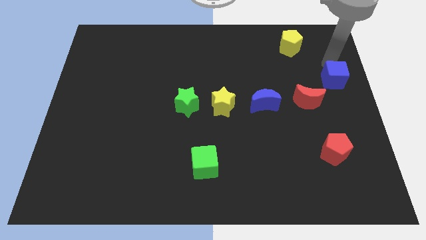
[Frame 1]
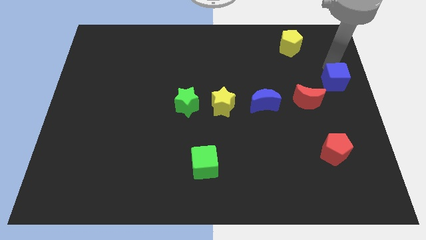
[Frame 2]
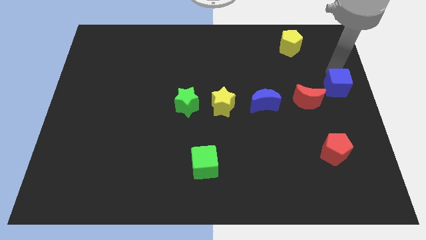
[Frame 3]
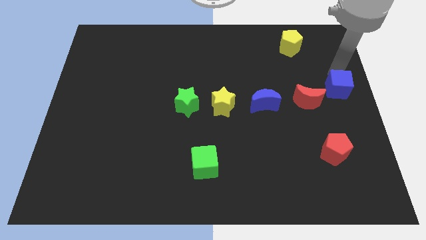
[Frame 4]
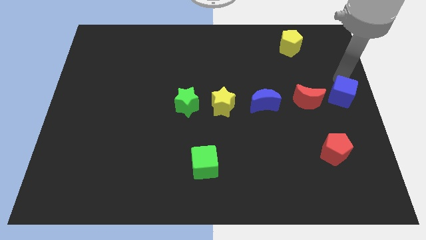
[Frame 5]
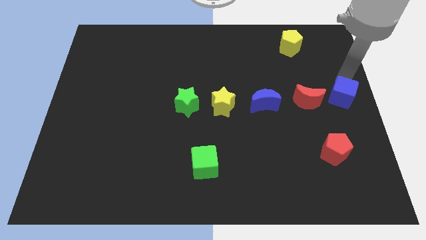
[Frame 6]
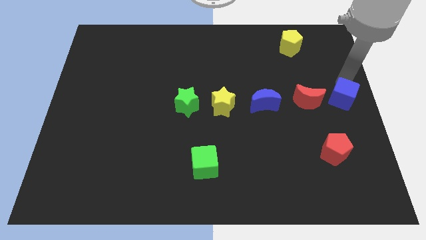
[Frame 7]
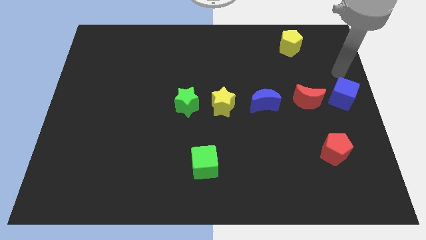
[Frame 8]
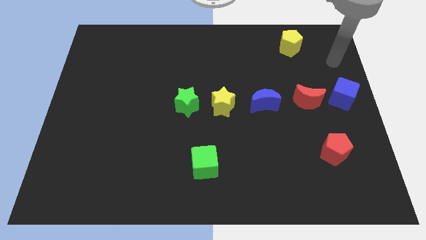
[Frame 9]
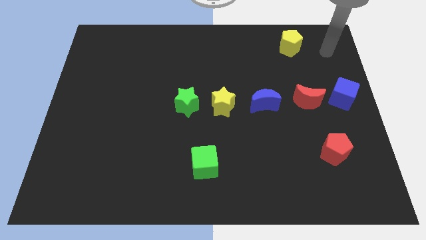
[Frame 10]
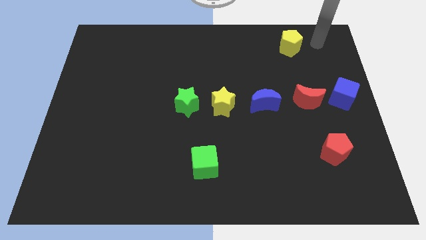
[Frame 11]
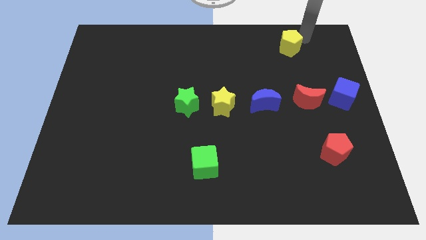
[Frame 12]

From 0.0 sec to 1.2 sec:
move the blue cube slightly downwards

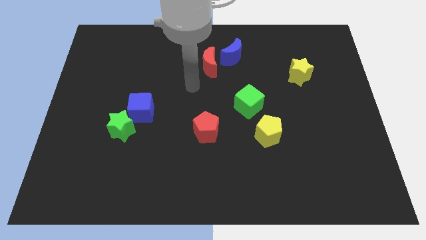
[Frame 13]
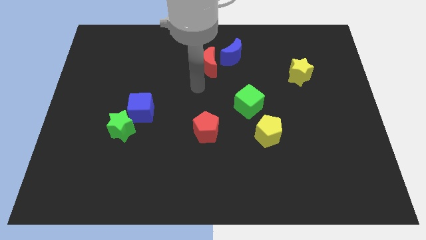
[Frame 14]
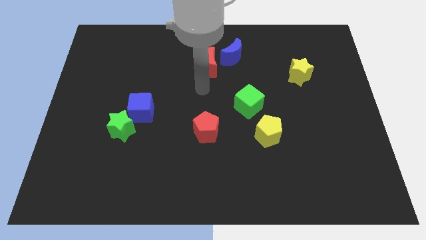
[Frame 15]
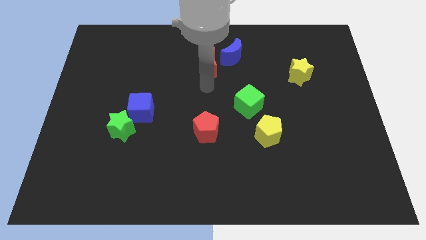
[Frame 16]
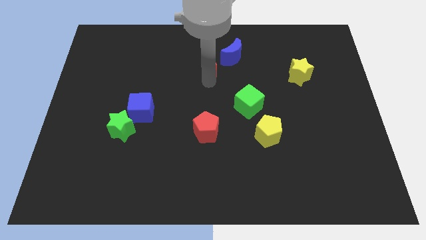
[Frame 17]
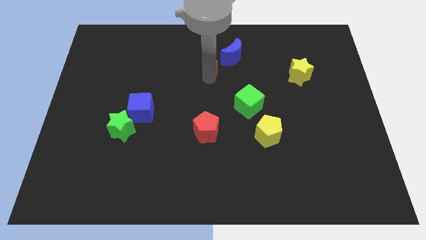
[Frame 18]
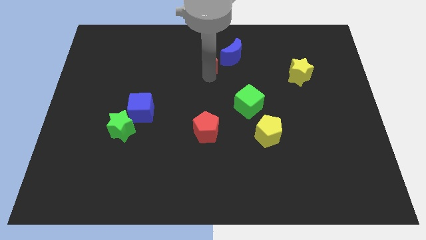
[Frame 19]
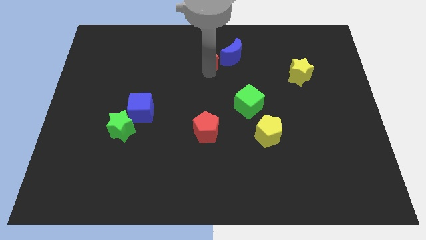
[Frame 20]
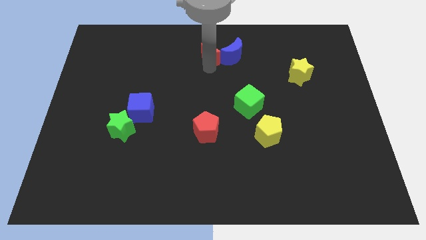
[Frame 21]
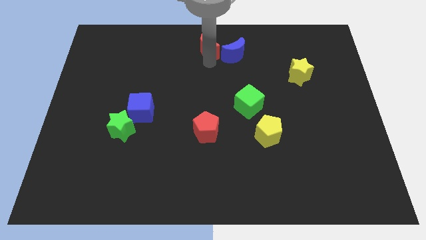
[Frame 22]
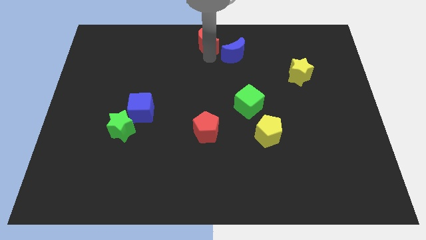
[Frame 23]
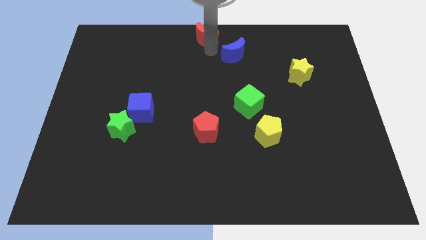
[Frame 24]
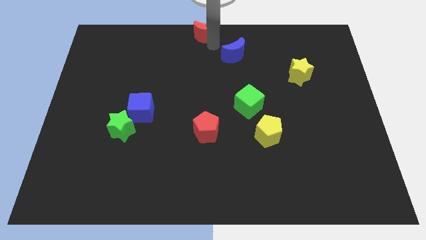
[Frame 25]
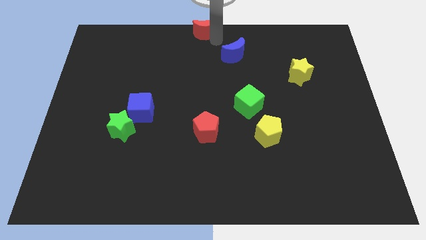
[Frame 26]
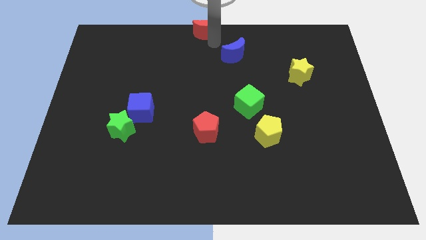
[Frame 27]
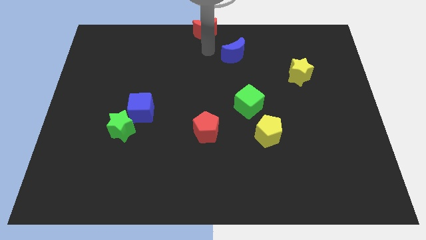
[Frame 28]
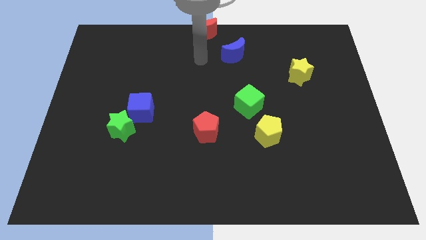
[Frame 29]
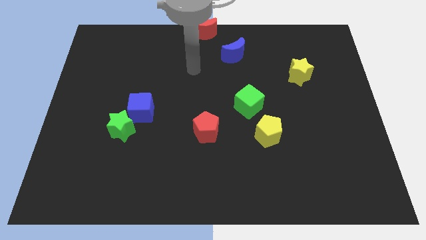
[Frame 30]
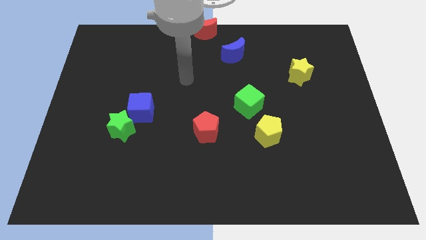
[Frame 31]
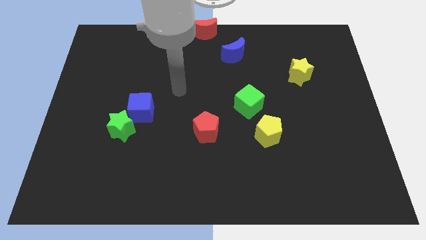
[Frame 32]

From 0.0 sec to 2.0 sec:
slide the red moon up slightly

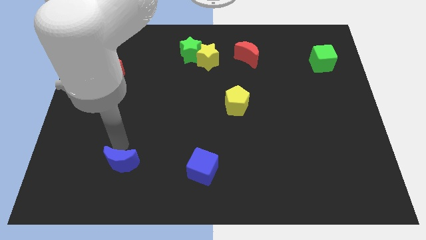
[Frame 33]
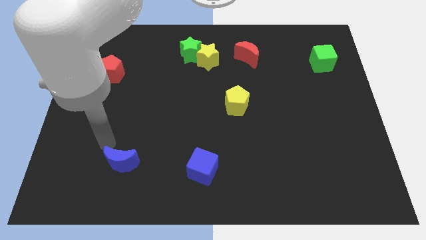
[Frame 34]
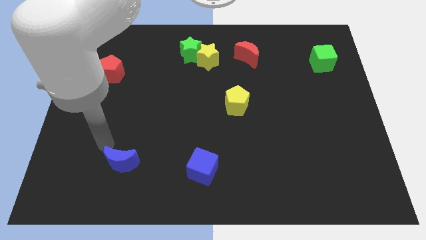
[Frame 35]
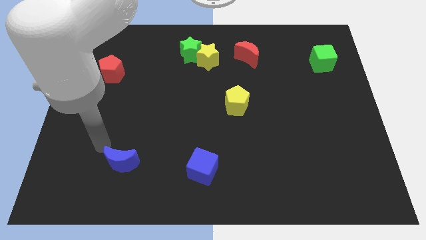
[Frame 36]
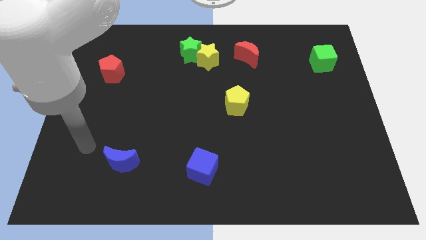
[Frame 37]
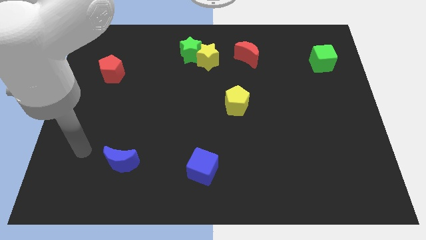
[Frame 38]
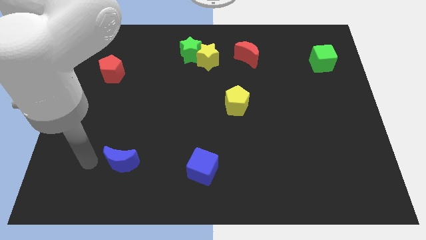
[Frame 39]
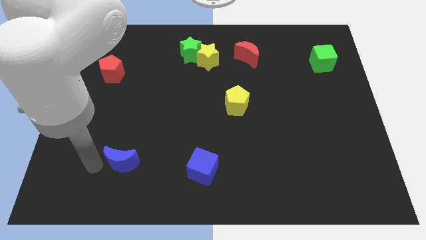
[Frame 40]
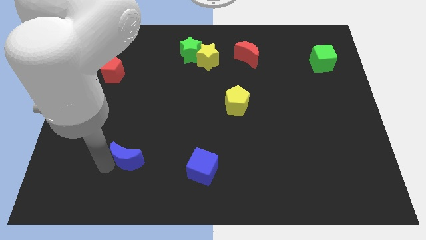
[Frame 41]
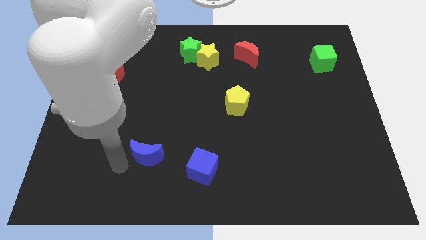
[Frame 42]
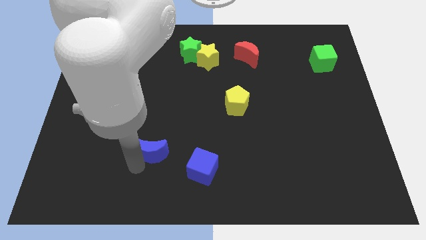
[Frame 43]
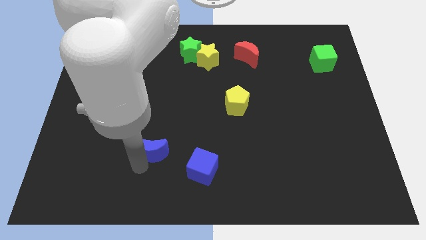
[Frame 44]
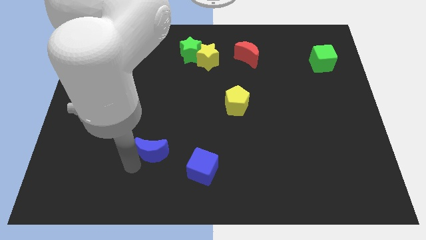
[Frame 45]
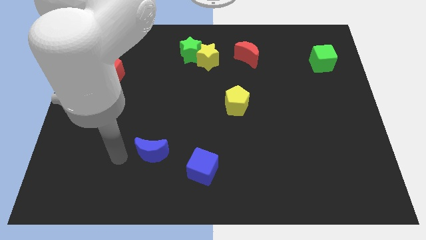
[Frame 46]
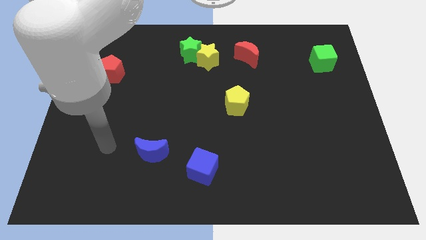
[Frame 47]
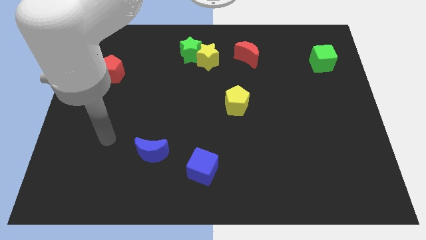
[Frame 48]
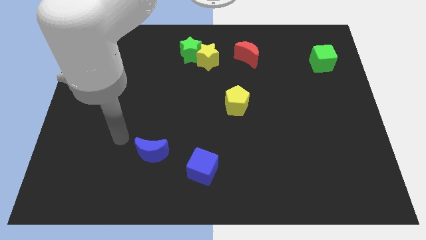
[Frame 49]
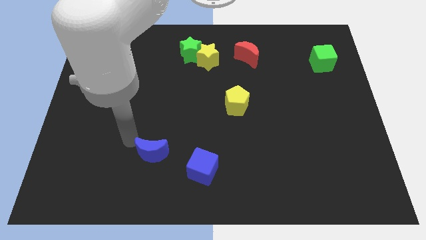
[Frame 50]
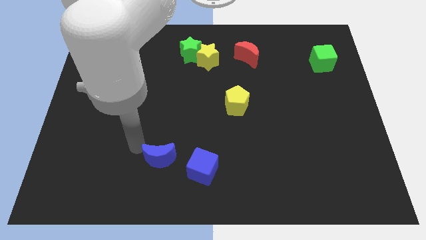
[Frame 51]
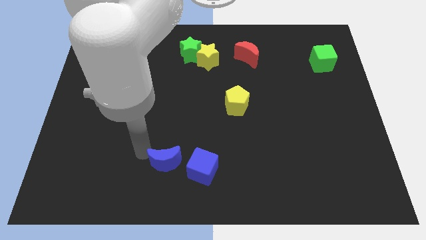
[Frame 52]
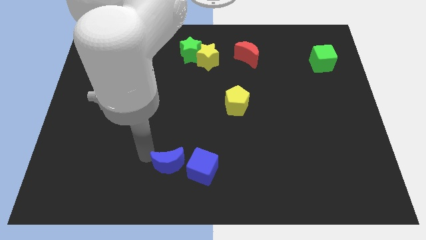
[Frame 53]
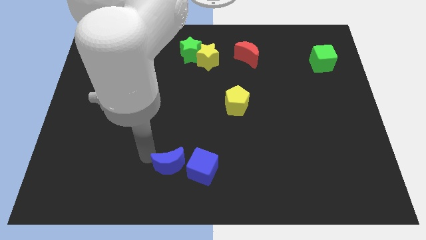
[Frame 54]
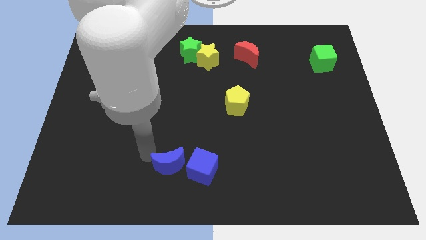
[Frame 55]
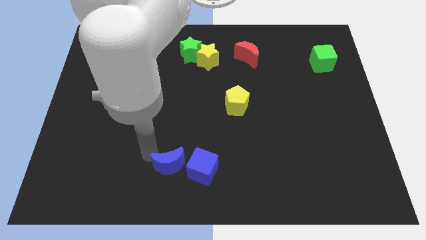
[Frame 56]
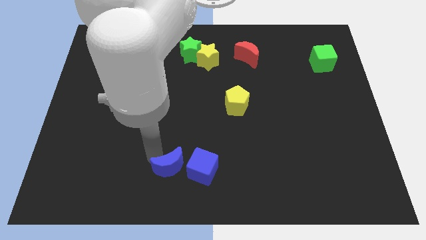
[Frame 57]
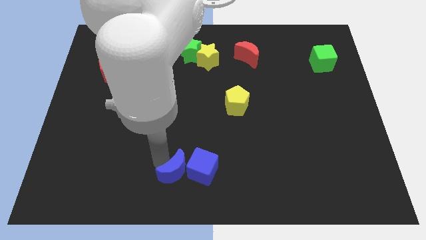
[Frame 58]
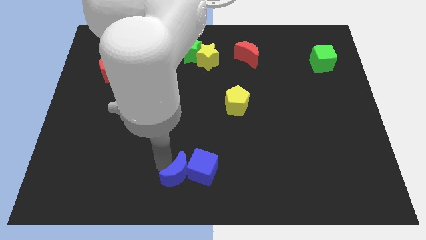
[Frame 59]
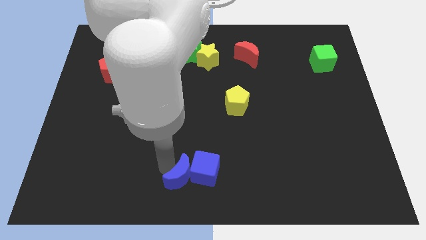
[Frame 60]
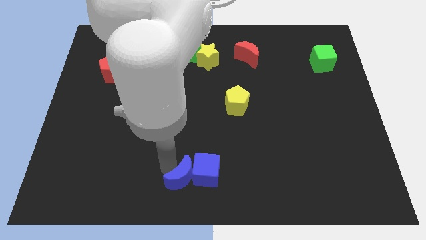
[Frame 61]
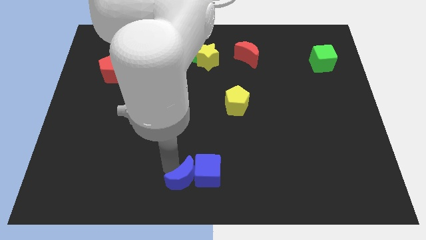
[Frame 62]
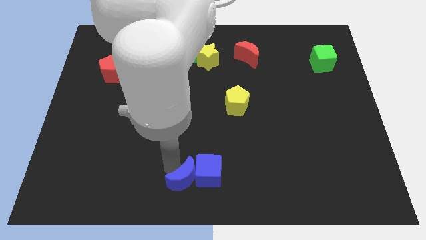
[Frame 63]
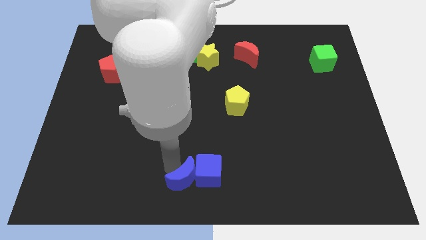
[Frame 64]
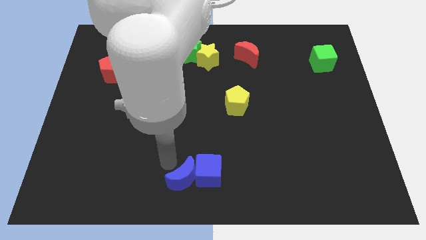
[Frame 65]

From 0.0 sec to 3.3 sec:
push the blue crescent into the left of the blue cube

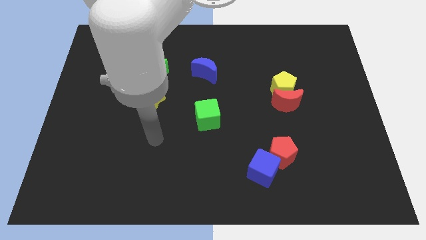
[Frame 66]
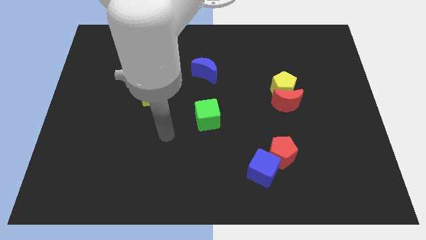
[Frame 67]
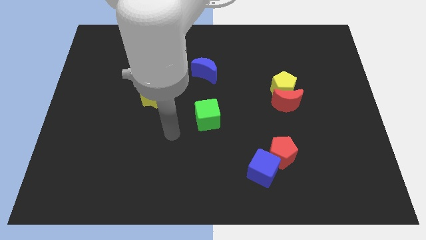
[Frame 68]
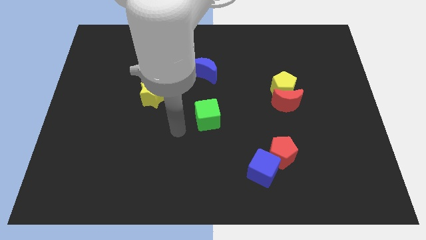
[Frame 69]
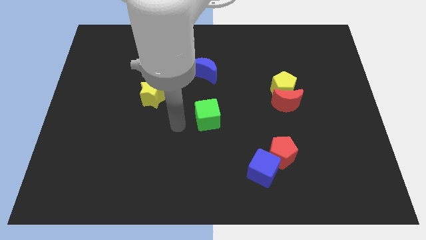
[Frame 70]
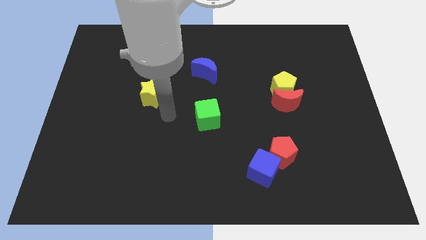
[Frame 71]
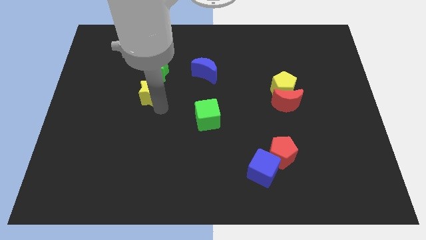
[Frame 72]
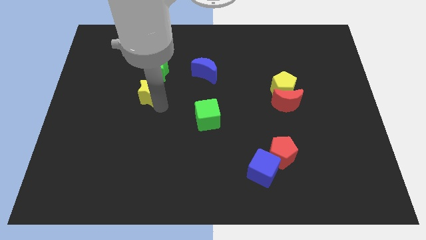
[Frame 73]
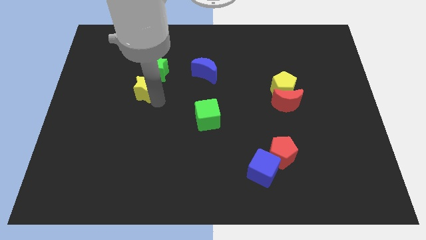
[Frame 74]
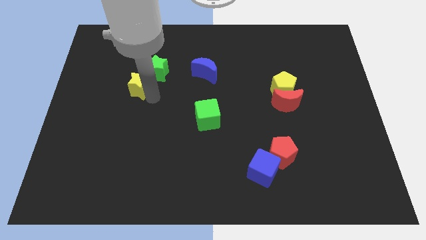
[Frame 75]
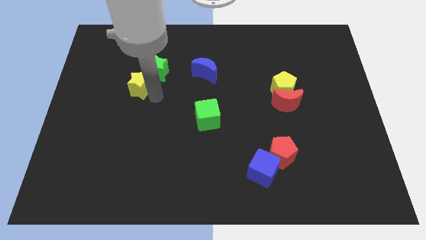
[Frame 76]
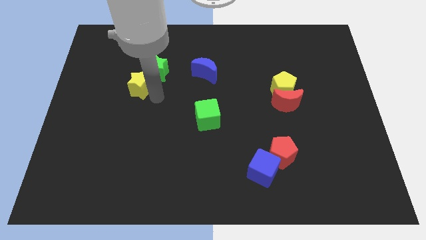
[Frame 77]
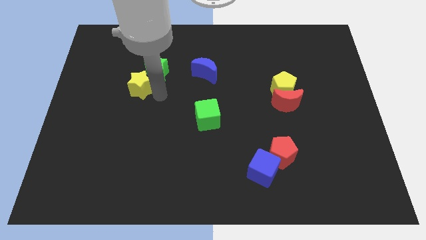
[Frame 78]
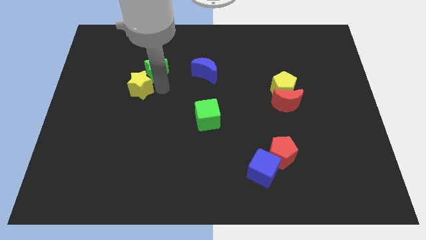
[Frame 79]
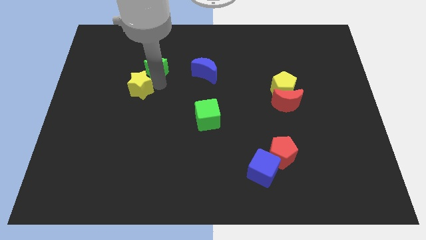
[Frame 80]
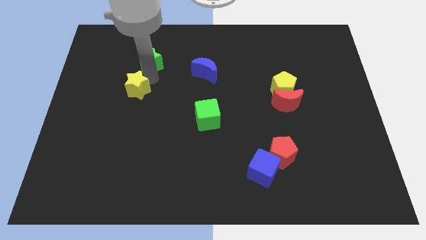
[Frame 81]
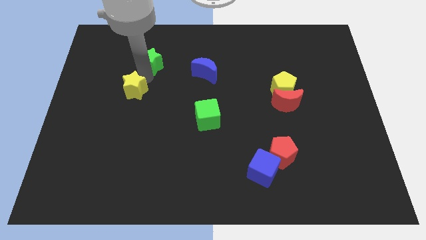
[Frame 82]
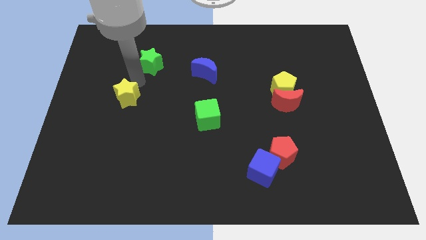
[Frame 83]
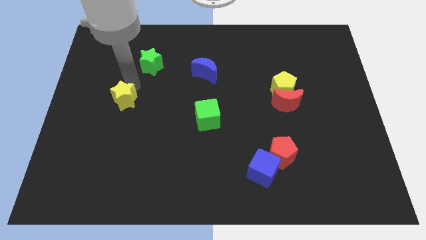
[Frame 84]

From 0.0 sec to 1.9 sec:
separate the yellow star from the green star

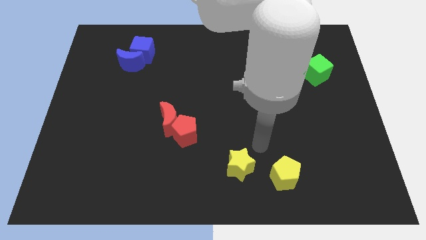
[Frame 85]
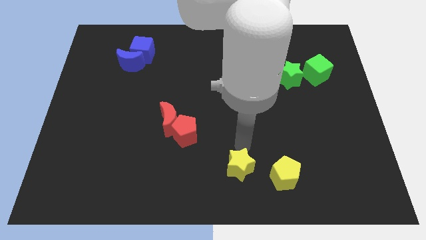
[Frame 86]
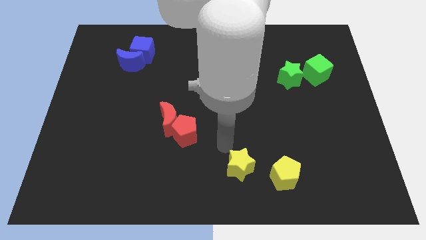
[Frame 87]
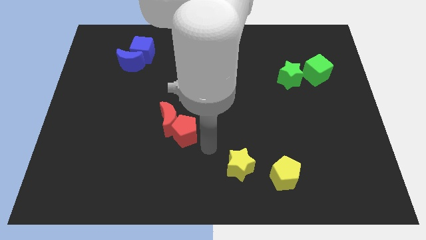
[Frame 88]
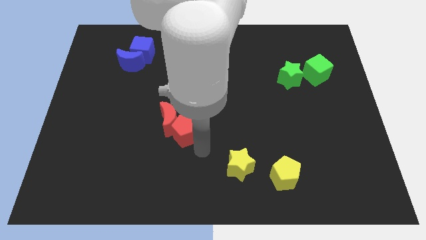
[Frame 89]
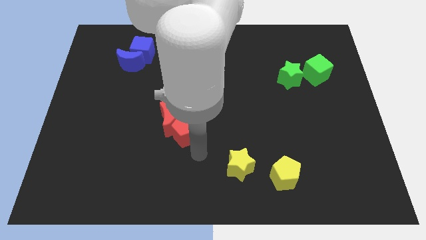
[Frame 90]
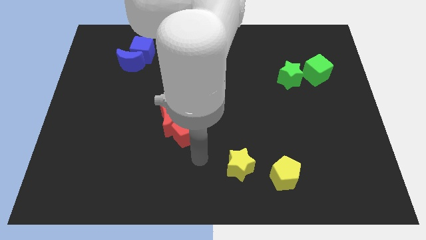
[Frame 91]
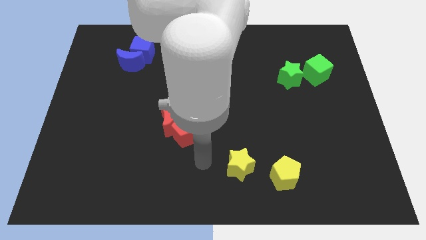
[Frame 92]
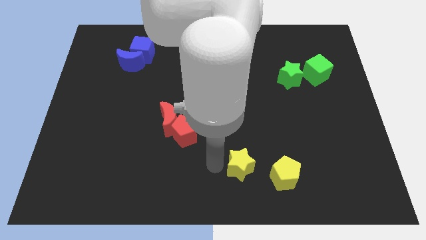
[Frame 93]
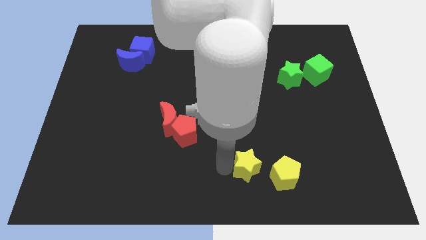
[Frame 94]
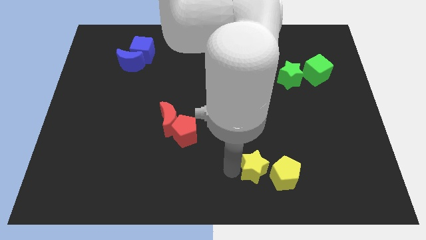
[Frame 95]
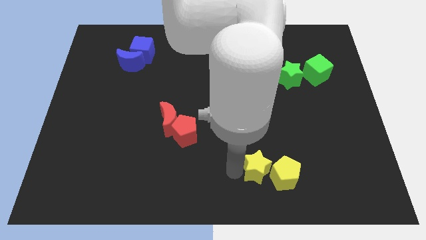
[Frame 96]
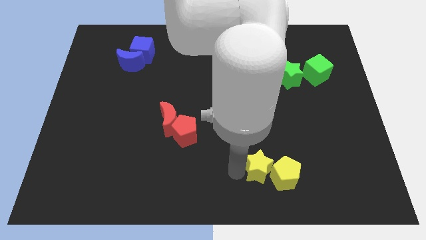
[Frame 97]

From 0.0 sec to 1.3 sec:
push the yellow star to the left of the yellow pentagon
